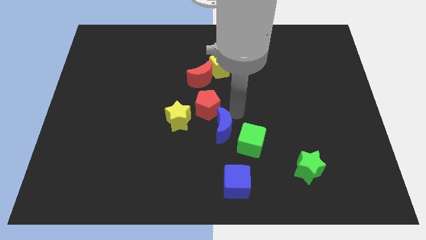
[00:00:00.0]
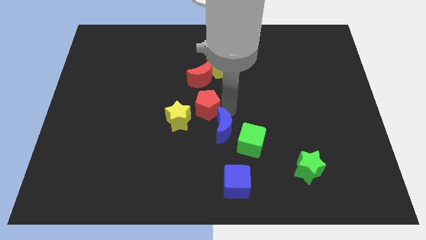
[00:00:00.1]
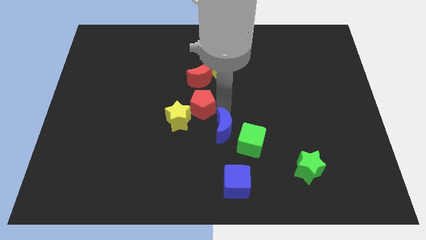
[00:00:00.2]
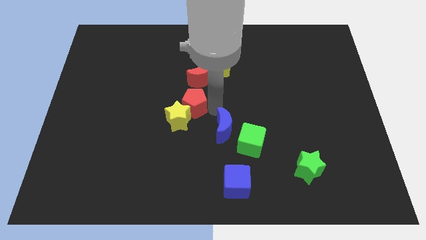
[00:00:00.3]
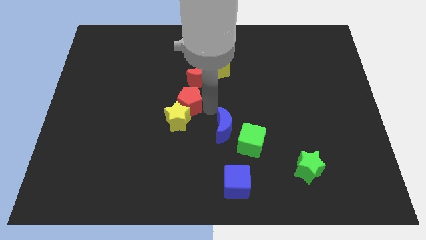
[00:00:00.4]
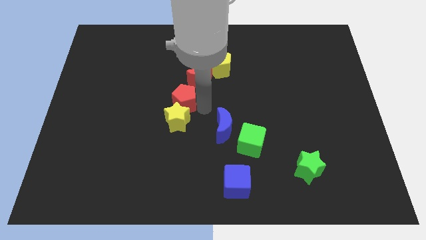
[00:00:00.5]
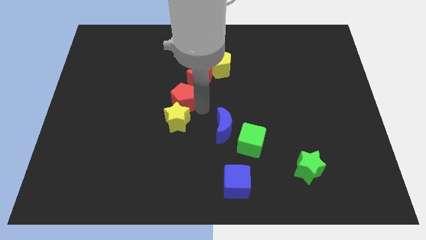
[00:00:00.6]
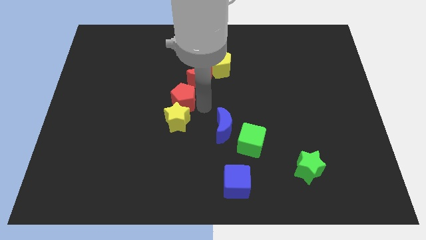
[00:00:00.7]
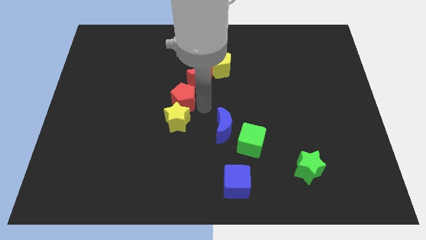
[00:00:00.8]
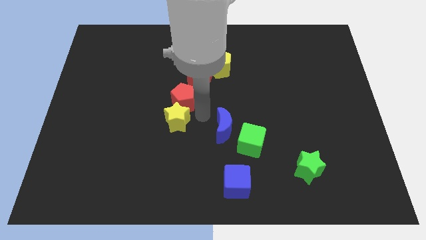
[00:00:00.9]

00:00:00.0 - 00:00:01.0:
place the red pentagon in between the red crescent and yellow star

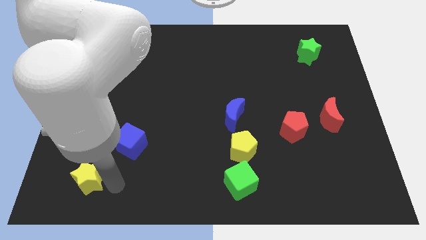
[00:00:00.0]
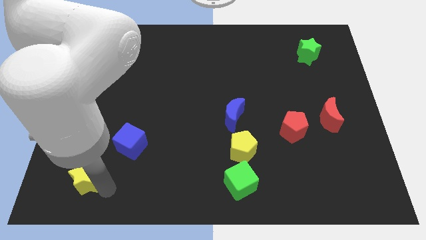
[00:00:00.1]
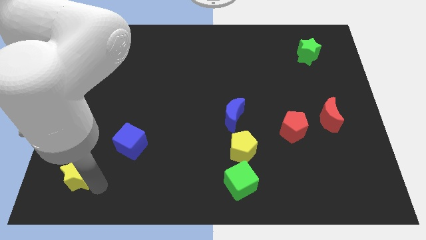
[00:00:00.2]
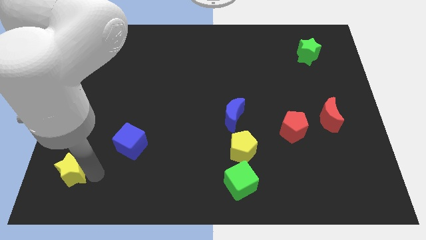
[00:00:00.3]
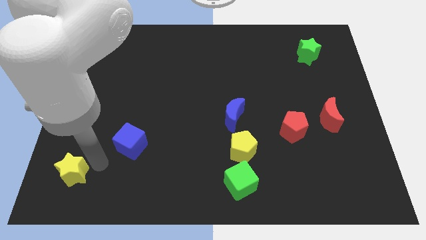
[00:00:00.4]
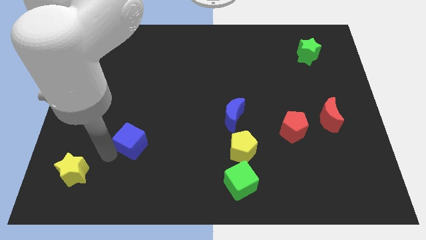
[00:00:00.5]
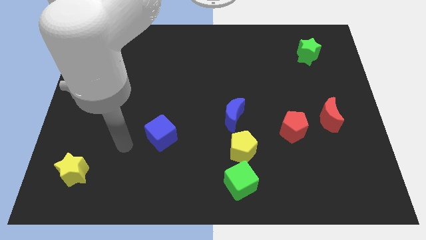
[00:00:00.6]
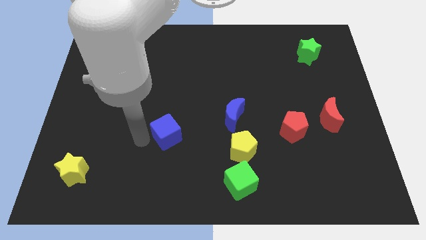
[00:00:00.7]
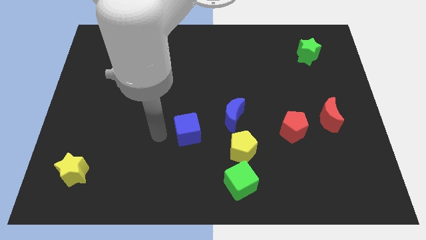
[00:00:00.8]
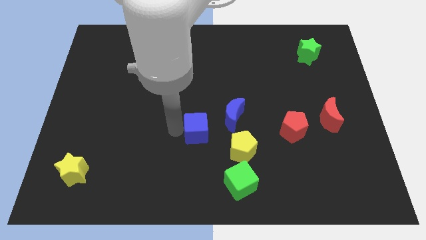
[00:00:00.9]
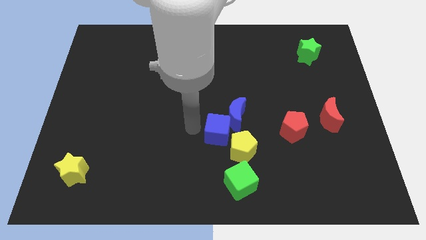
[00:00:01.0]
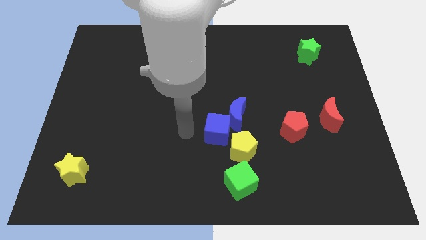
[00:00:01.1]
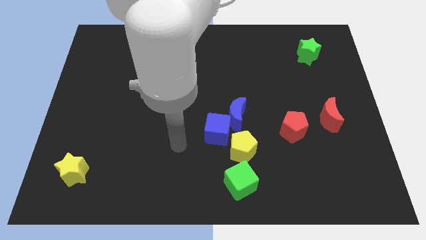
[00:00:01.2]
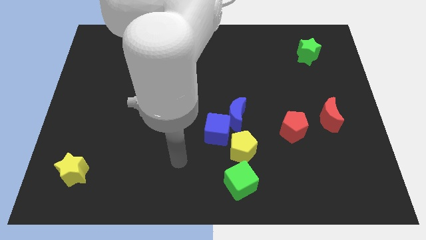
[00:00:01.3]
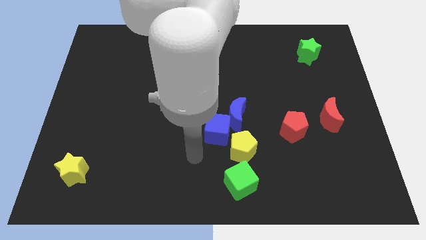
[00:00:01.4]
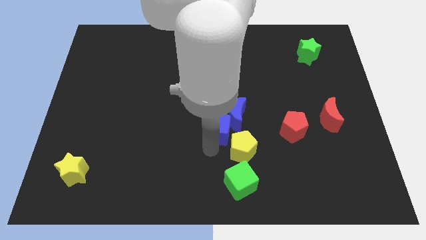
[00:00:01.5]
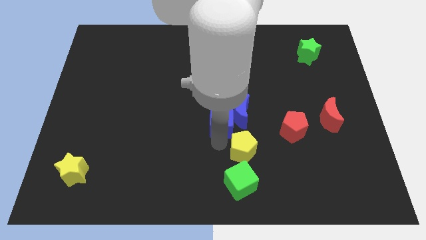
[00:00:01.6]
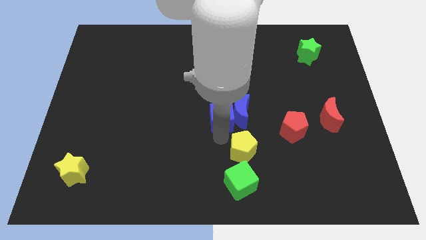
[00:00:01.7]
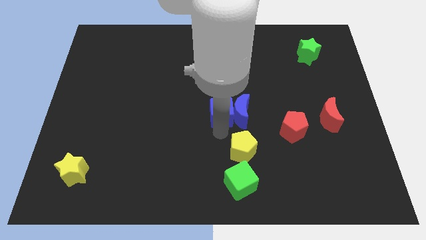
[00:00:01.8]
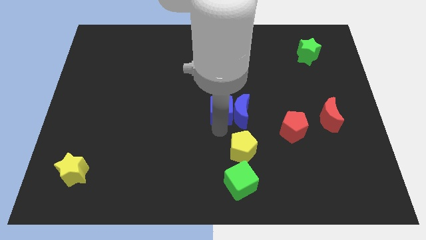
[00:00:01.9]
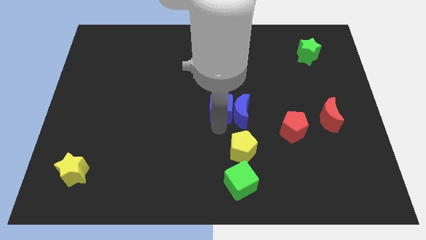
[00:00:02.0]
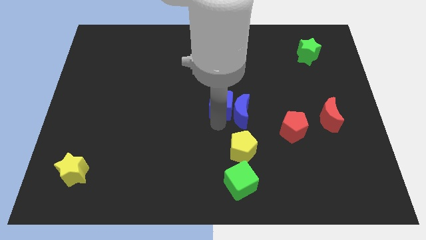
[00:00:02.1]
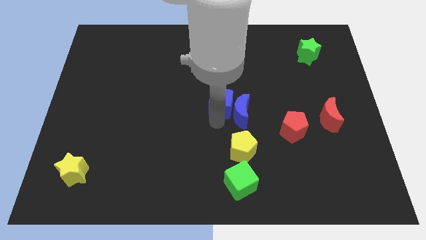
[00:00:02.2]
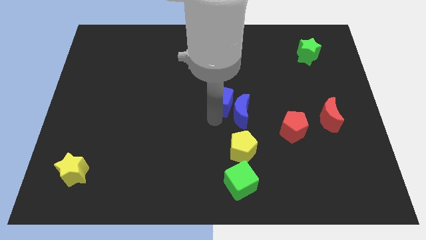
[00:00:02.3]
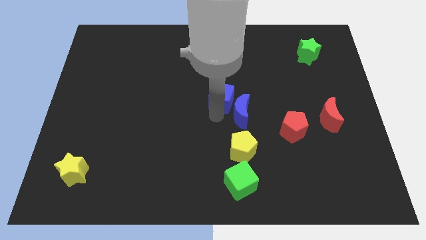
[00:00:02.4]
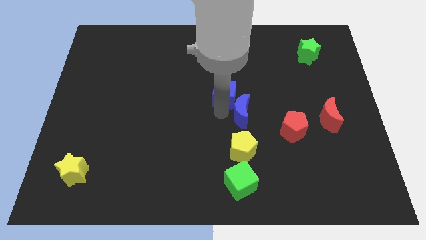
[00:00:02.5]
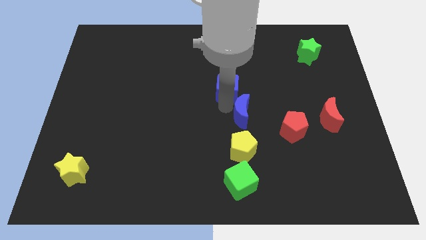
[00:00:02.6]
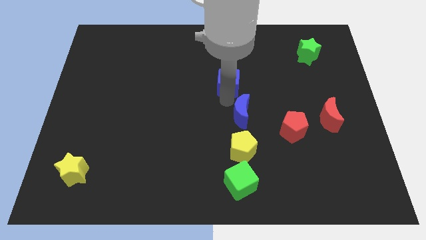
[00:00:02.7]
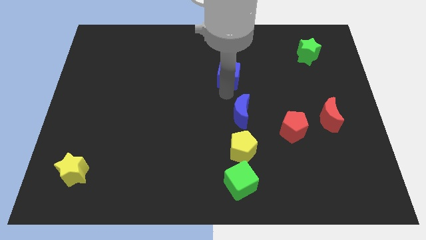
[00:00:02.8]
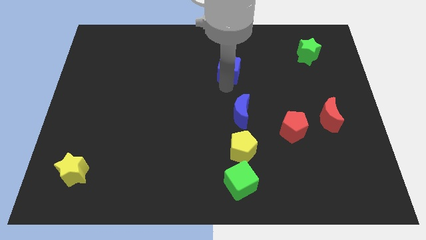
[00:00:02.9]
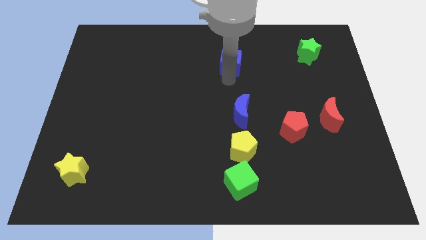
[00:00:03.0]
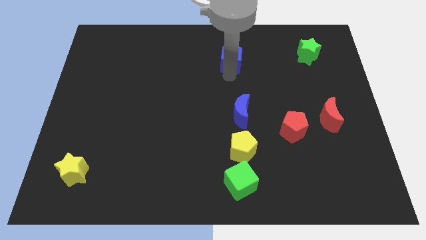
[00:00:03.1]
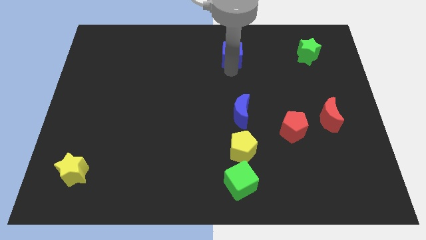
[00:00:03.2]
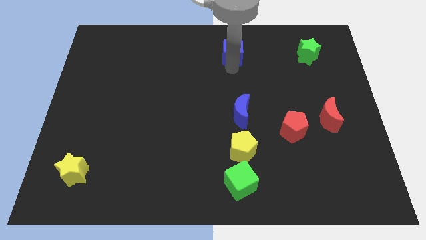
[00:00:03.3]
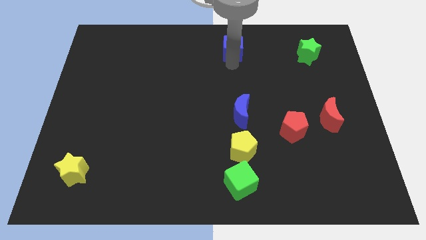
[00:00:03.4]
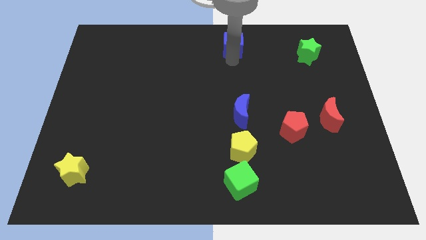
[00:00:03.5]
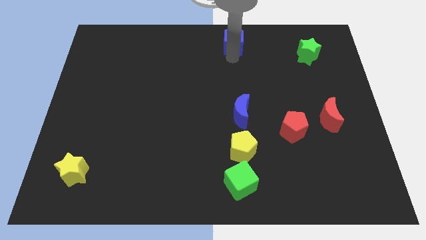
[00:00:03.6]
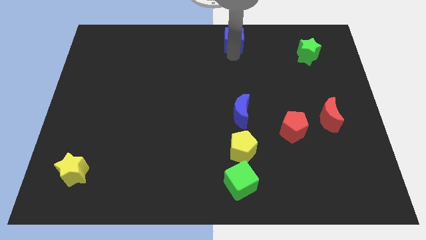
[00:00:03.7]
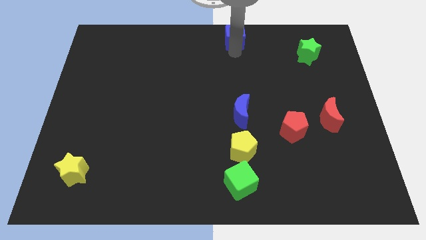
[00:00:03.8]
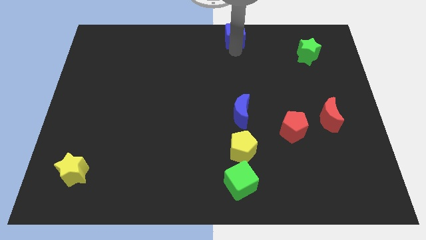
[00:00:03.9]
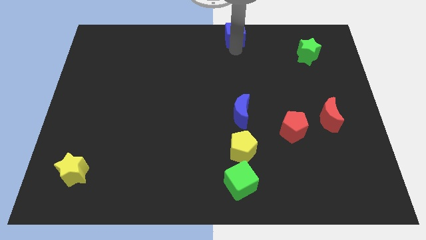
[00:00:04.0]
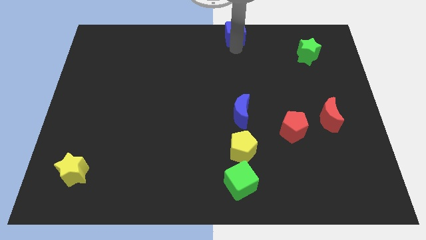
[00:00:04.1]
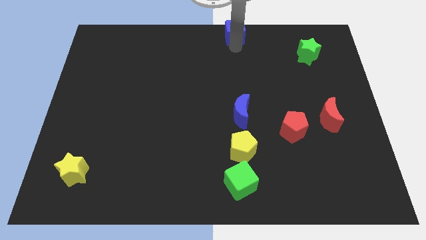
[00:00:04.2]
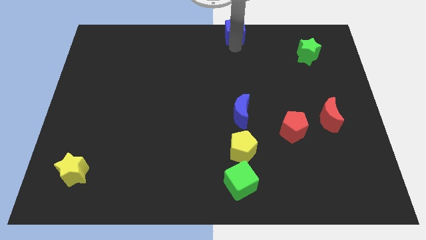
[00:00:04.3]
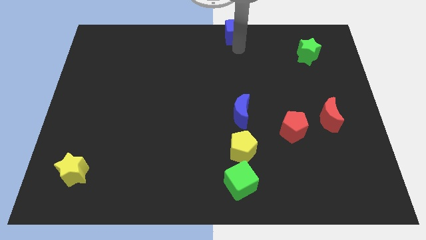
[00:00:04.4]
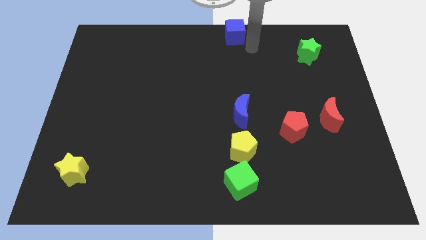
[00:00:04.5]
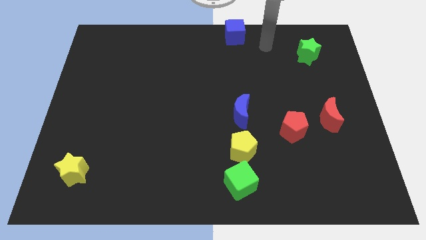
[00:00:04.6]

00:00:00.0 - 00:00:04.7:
place the blue cube towards the top center of the board

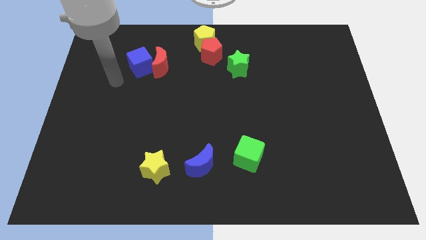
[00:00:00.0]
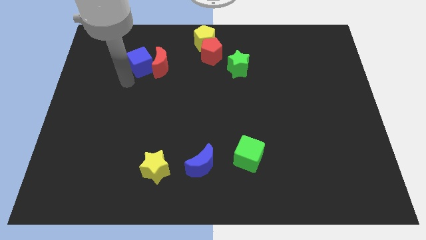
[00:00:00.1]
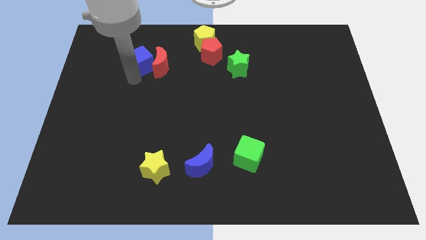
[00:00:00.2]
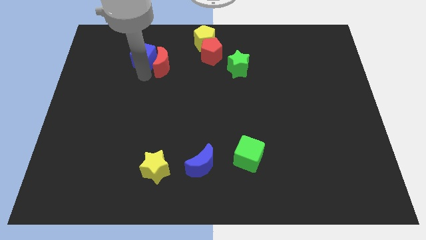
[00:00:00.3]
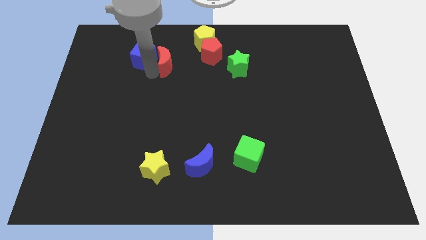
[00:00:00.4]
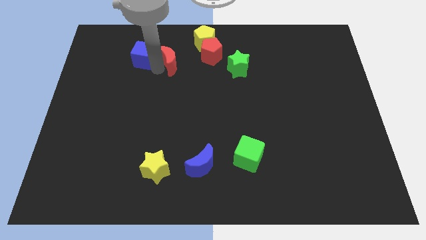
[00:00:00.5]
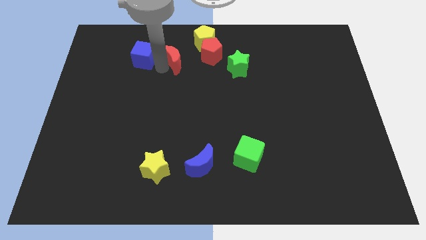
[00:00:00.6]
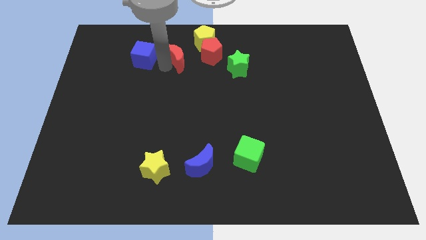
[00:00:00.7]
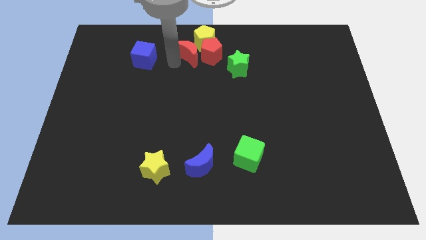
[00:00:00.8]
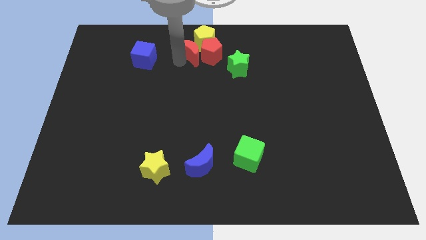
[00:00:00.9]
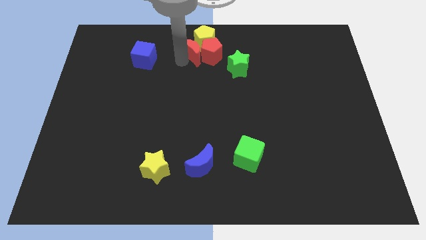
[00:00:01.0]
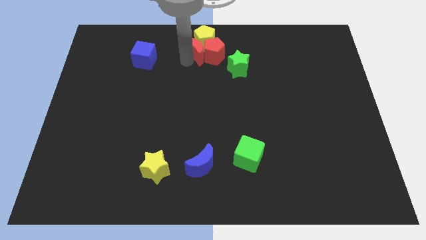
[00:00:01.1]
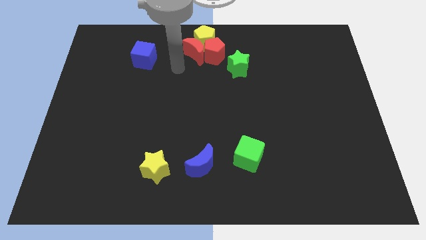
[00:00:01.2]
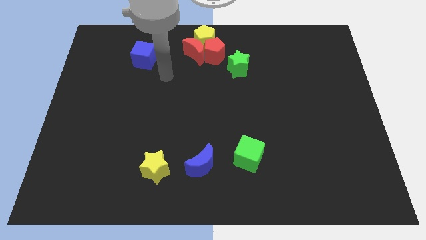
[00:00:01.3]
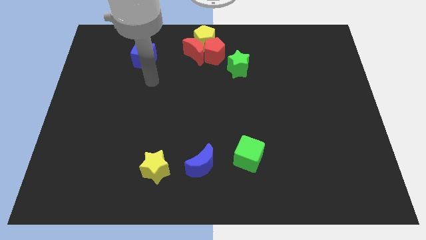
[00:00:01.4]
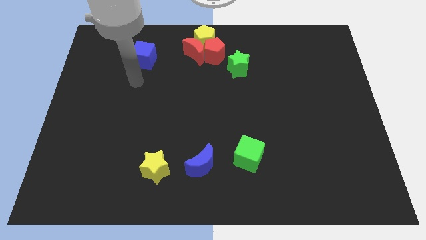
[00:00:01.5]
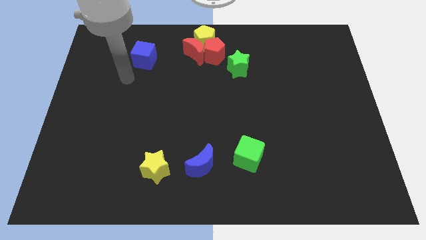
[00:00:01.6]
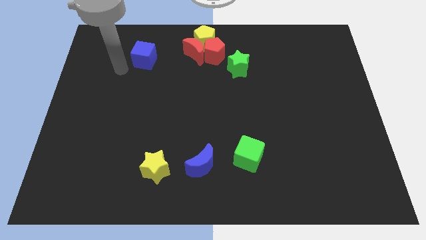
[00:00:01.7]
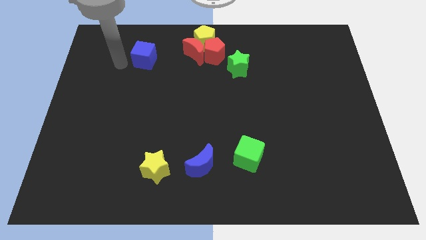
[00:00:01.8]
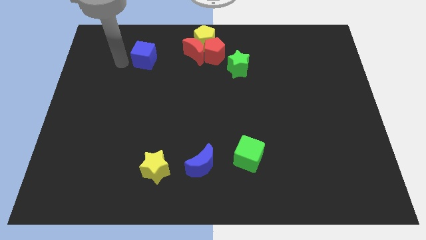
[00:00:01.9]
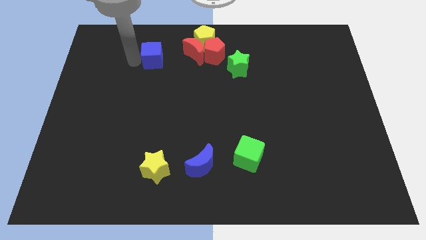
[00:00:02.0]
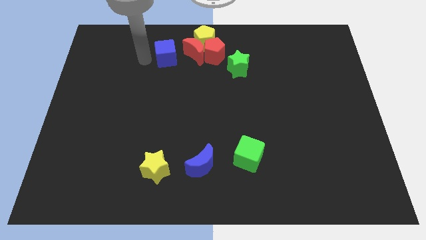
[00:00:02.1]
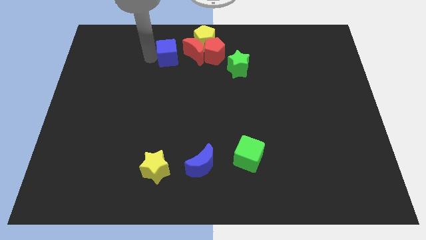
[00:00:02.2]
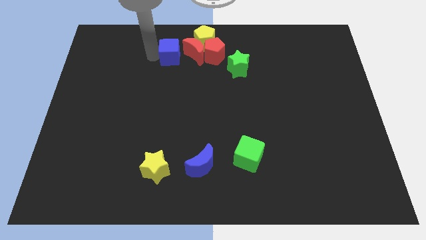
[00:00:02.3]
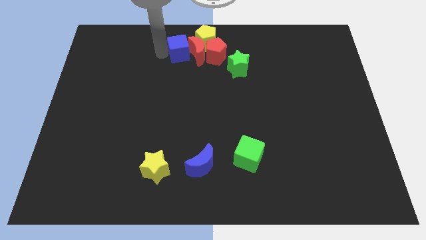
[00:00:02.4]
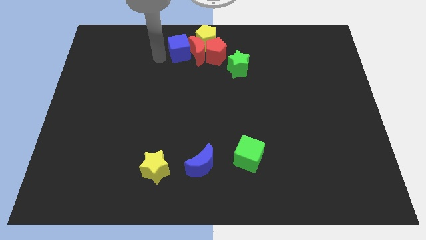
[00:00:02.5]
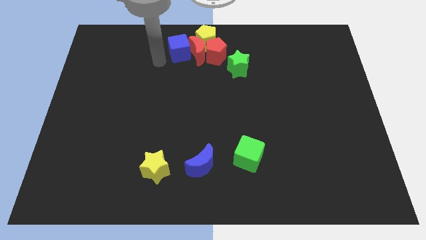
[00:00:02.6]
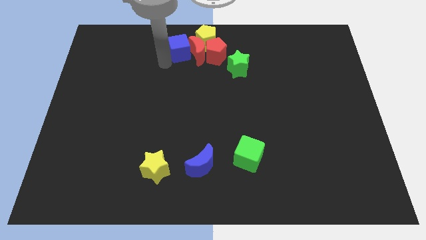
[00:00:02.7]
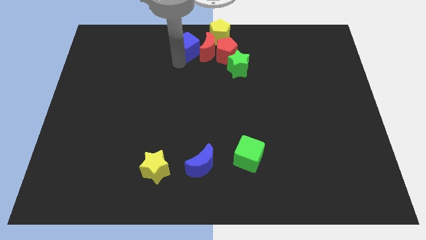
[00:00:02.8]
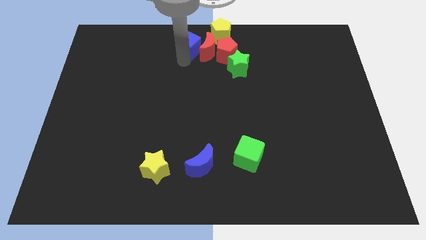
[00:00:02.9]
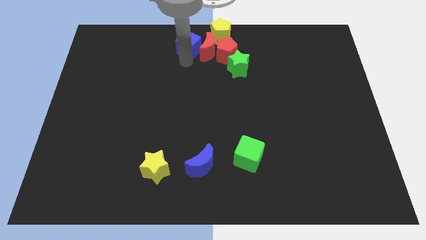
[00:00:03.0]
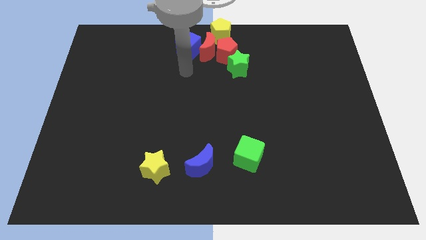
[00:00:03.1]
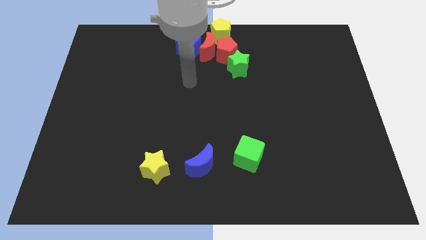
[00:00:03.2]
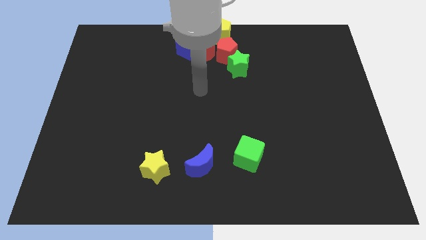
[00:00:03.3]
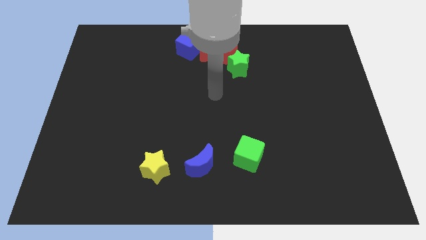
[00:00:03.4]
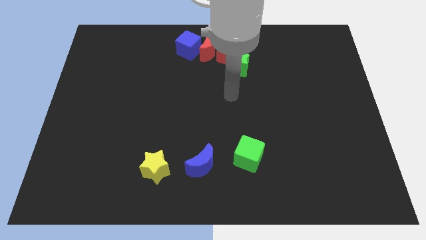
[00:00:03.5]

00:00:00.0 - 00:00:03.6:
push the red crescent and the blue cube to the top center of the board
